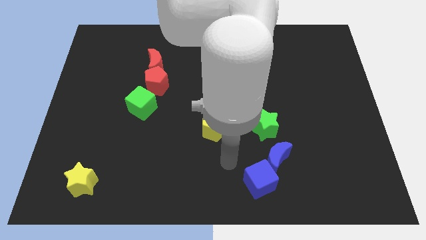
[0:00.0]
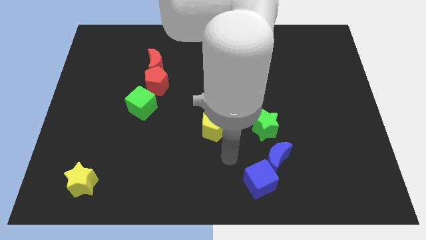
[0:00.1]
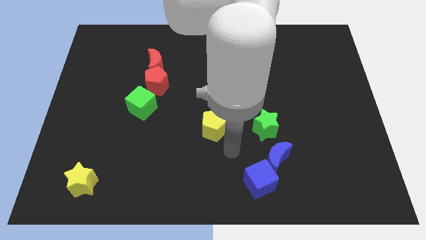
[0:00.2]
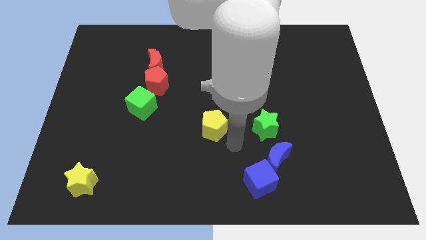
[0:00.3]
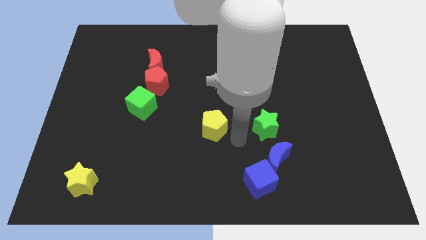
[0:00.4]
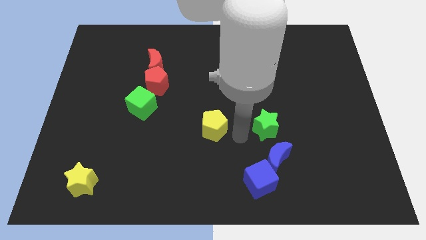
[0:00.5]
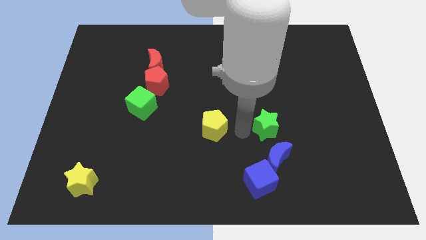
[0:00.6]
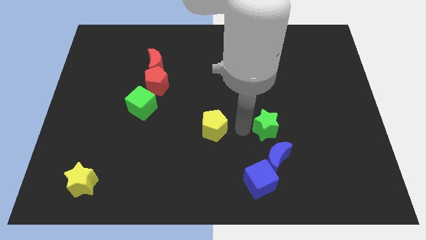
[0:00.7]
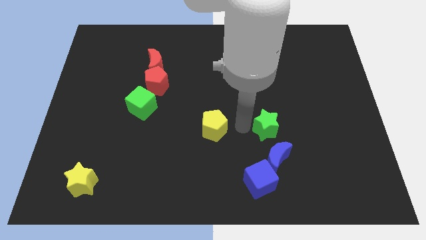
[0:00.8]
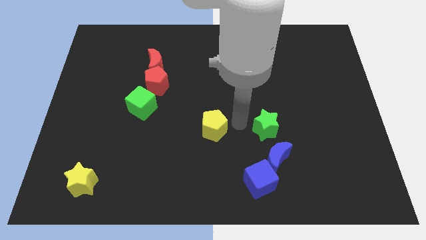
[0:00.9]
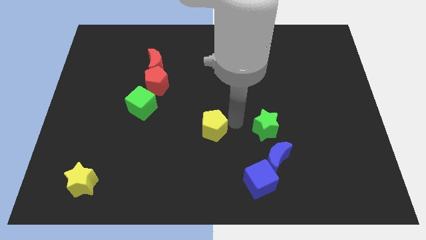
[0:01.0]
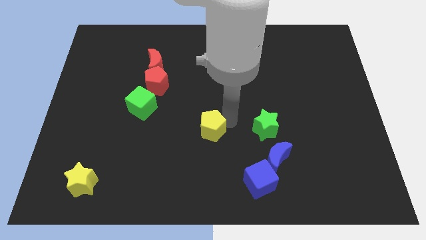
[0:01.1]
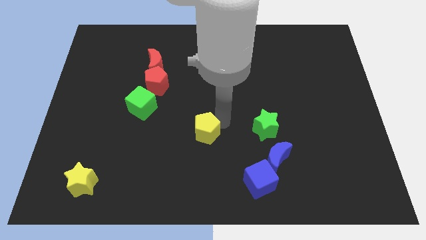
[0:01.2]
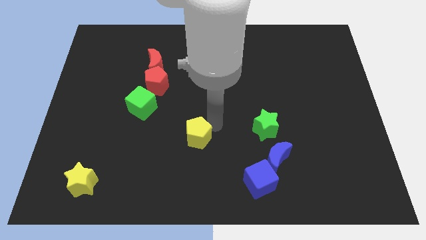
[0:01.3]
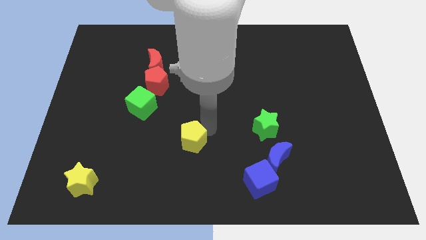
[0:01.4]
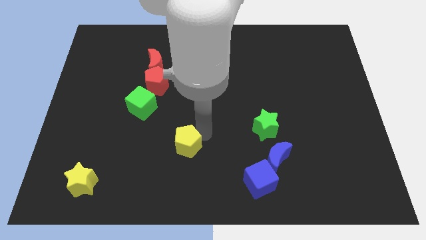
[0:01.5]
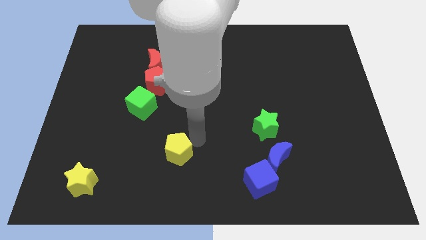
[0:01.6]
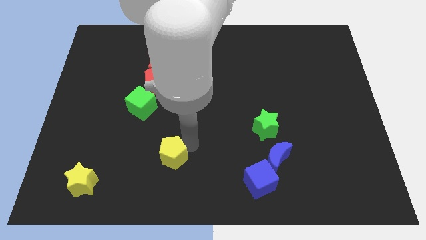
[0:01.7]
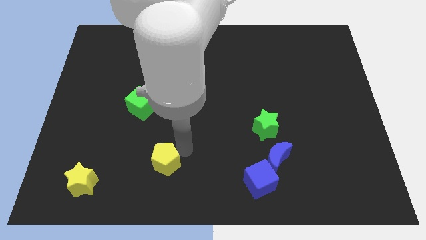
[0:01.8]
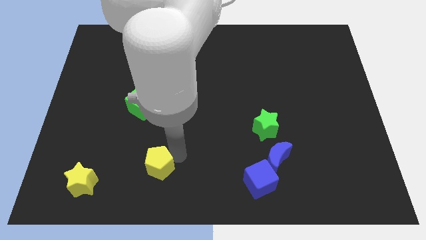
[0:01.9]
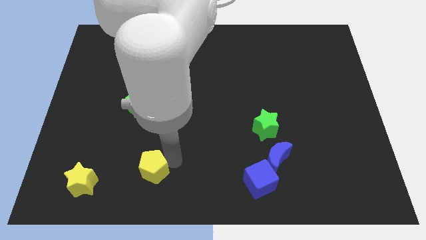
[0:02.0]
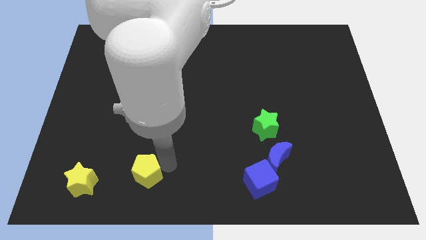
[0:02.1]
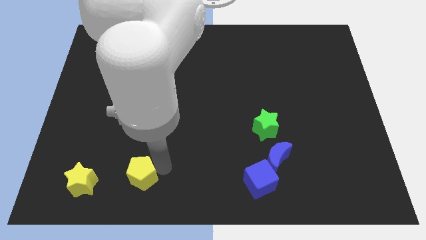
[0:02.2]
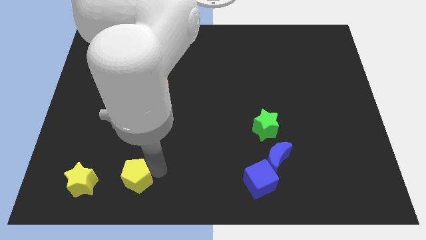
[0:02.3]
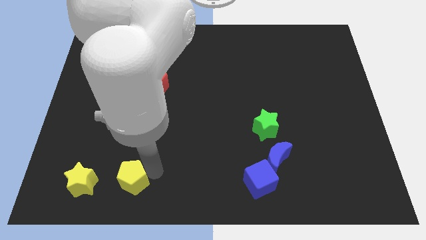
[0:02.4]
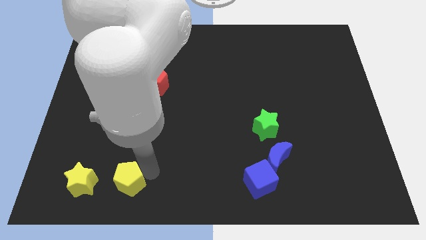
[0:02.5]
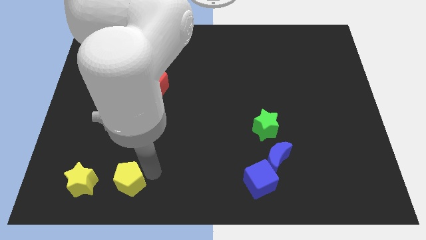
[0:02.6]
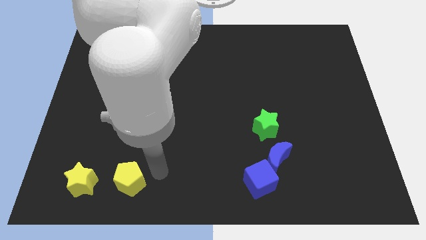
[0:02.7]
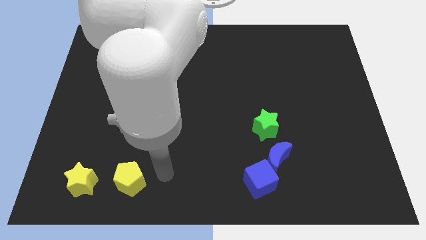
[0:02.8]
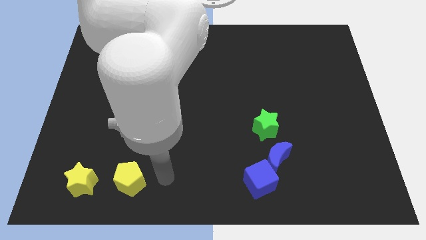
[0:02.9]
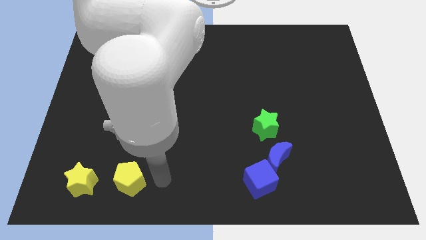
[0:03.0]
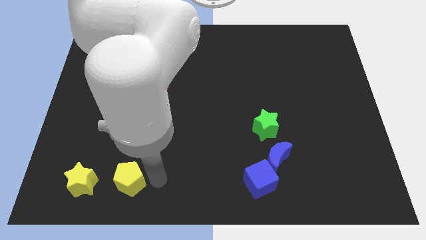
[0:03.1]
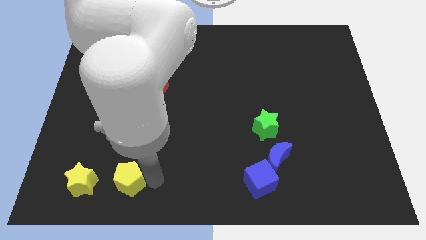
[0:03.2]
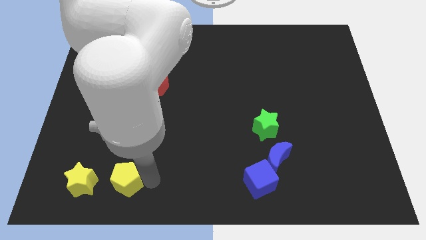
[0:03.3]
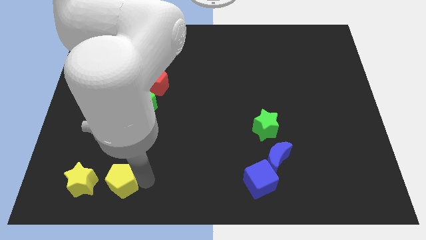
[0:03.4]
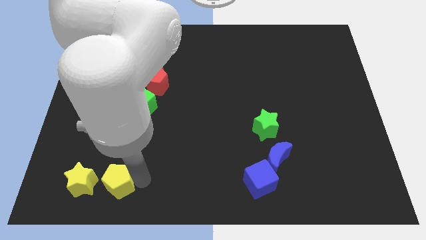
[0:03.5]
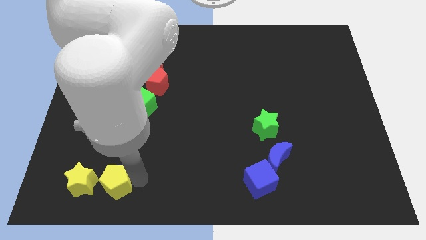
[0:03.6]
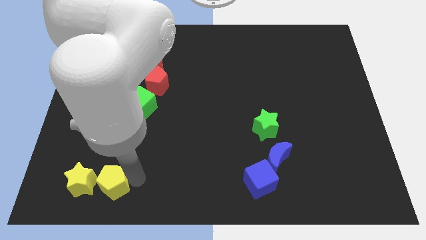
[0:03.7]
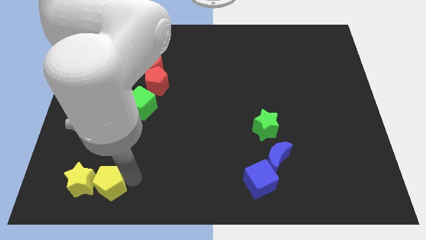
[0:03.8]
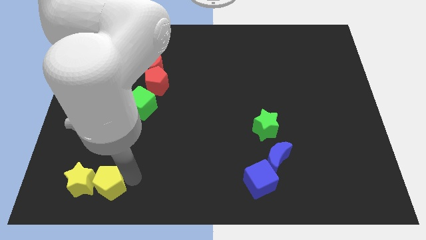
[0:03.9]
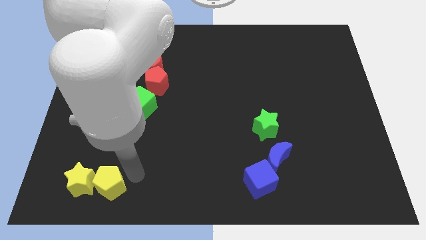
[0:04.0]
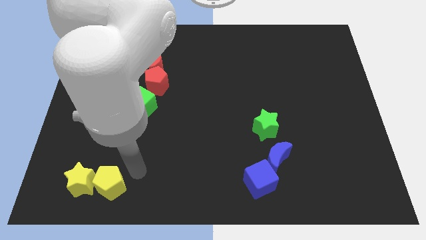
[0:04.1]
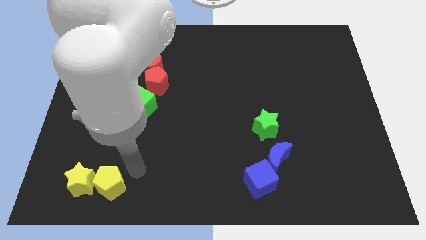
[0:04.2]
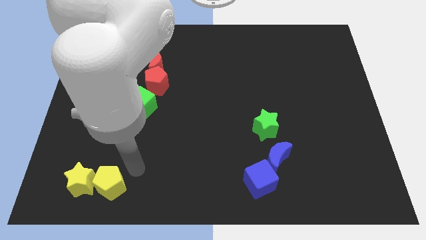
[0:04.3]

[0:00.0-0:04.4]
place the yellow pentagon close to the yellow star

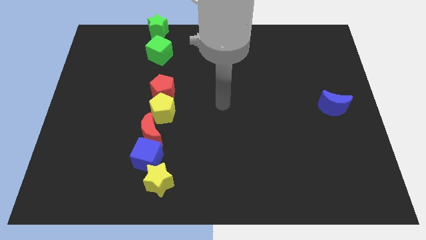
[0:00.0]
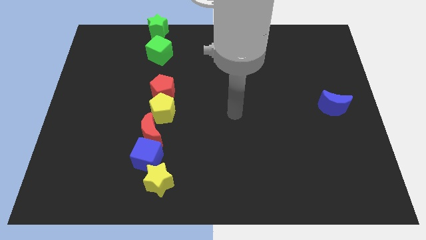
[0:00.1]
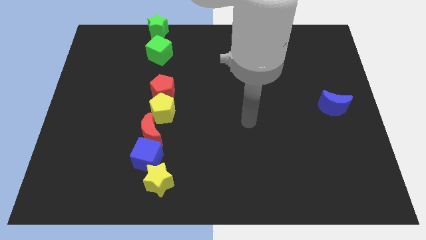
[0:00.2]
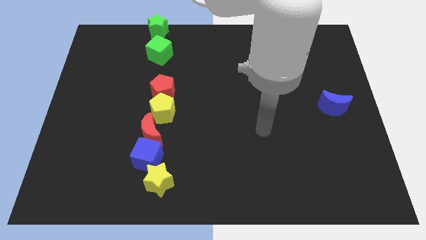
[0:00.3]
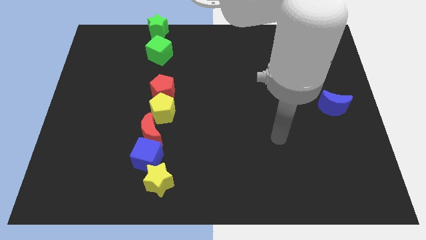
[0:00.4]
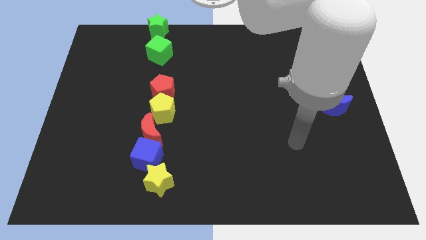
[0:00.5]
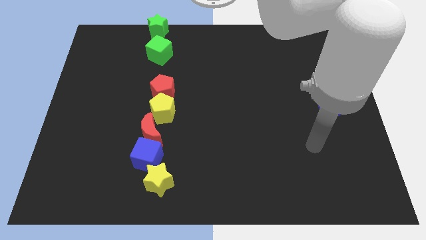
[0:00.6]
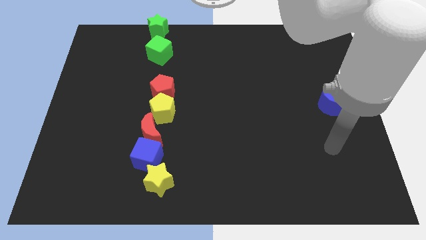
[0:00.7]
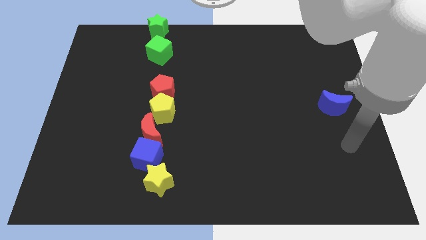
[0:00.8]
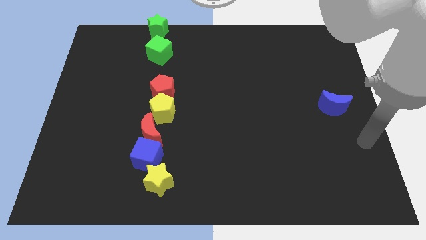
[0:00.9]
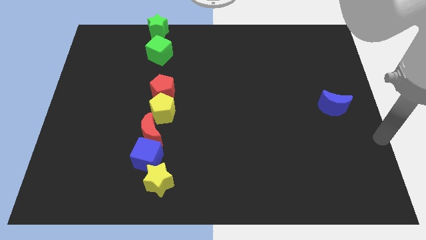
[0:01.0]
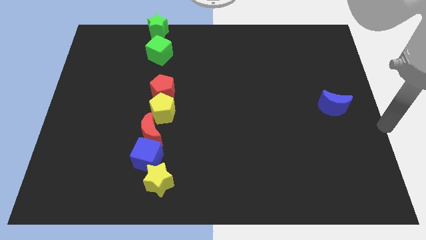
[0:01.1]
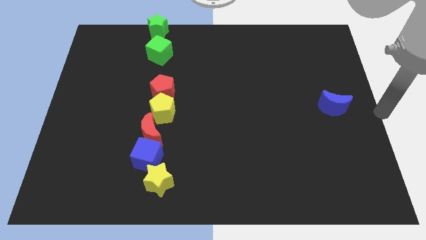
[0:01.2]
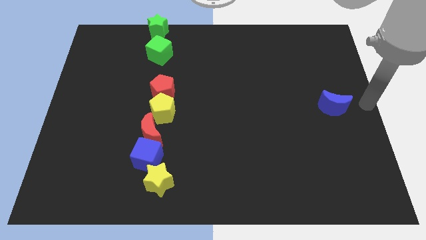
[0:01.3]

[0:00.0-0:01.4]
push your arm at the center right

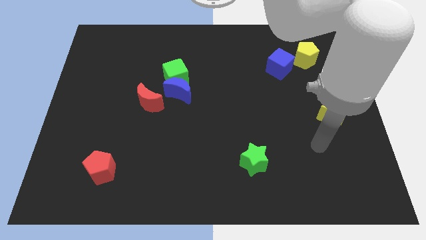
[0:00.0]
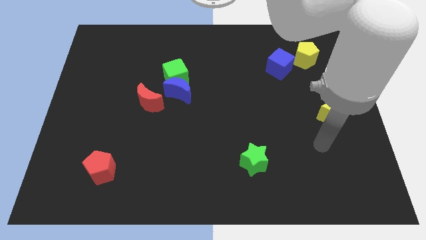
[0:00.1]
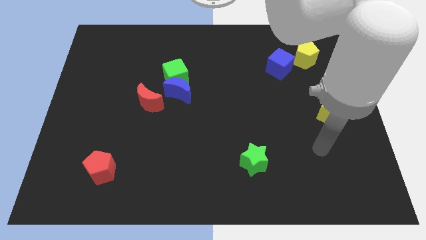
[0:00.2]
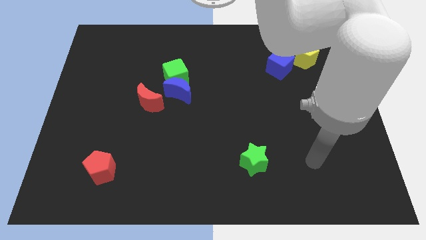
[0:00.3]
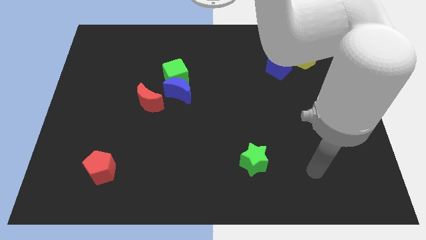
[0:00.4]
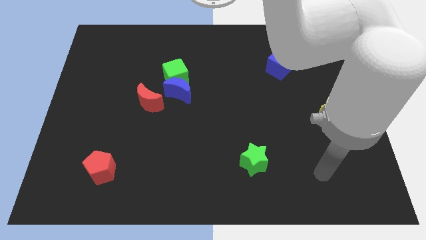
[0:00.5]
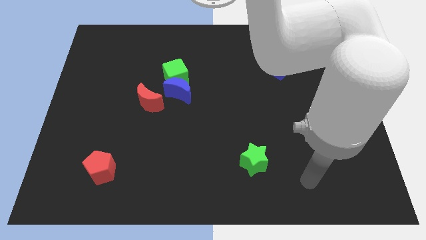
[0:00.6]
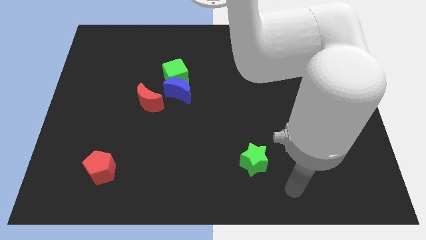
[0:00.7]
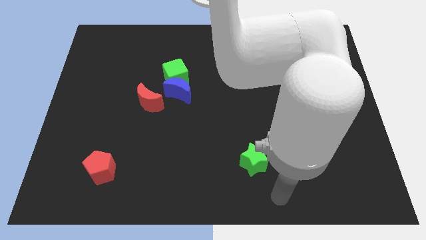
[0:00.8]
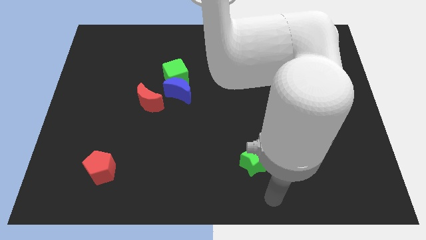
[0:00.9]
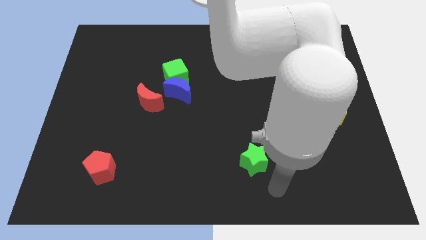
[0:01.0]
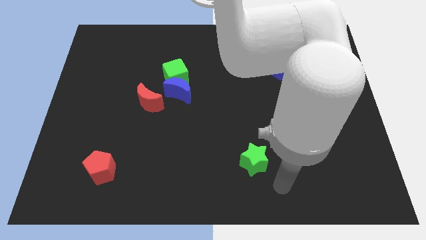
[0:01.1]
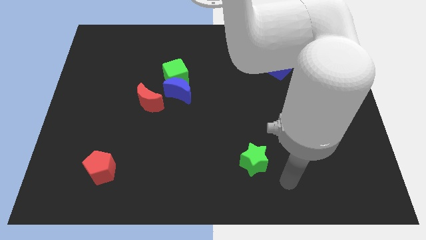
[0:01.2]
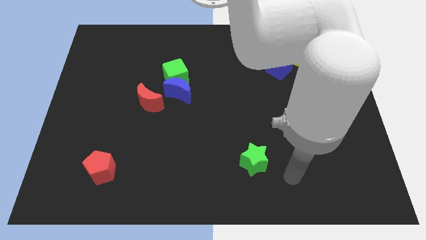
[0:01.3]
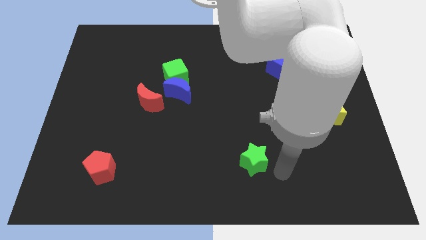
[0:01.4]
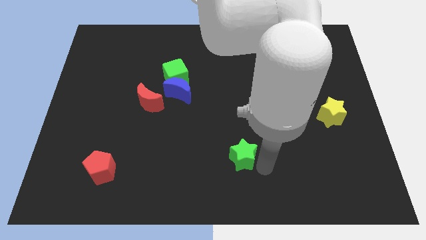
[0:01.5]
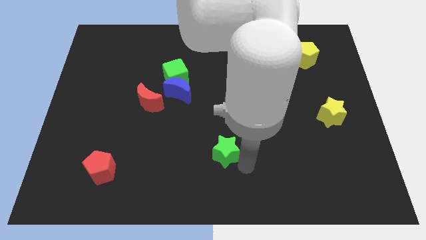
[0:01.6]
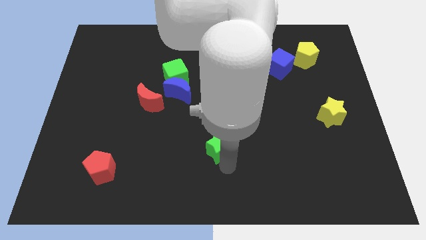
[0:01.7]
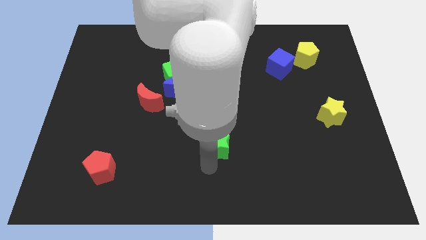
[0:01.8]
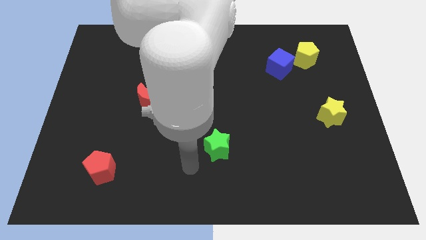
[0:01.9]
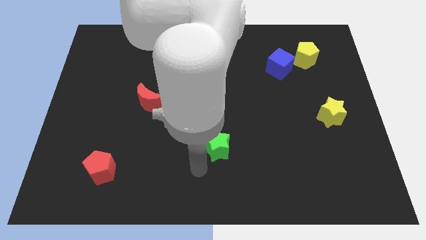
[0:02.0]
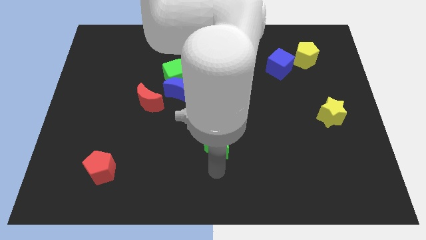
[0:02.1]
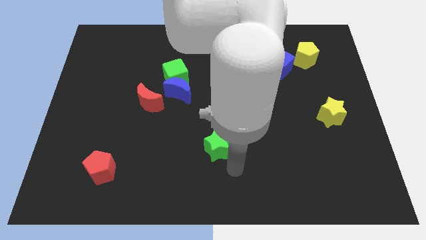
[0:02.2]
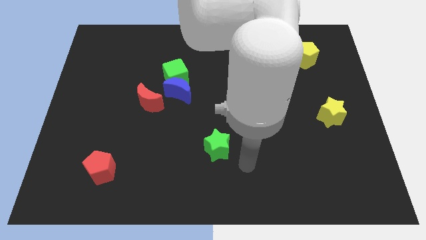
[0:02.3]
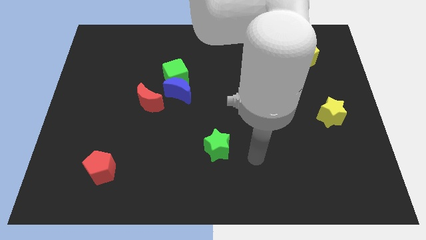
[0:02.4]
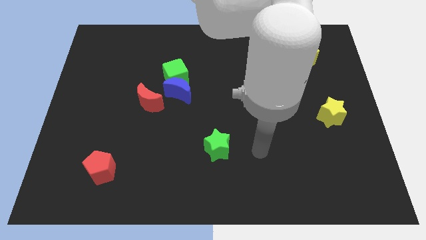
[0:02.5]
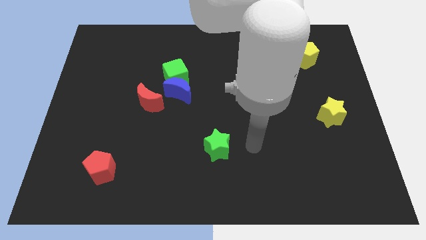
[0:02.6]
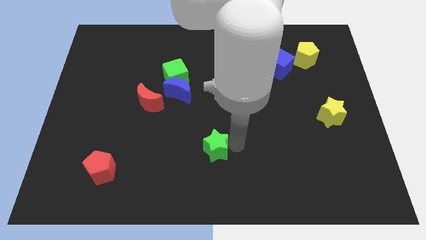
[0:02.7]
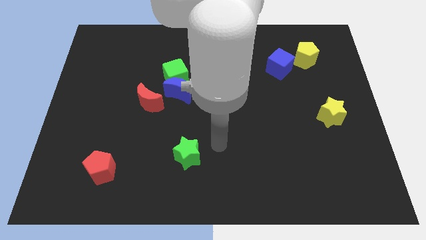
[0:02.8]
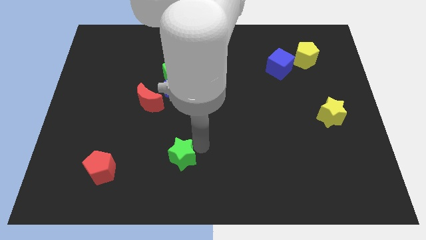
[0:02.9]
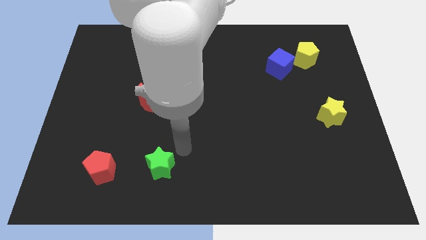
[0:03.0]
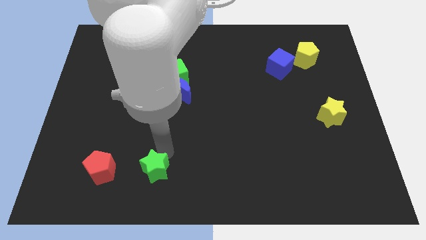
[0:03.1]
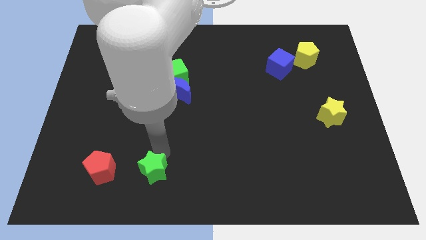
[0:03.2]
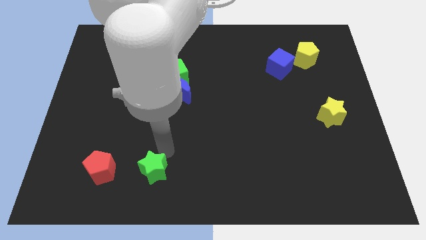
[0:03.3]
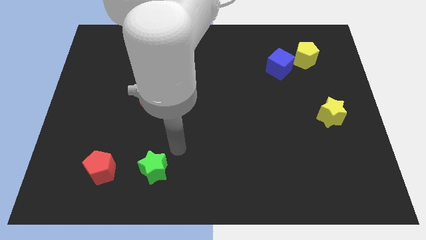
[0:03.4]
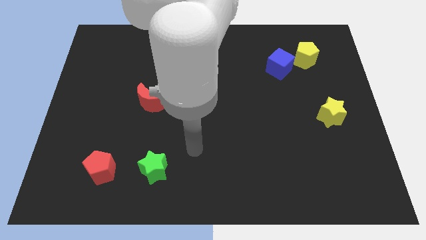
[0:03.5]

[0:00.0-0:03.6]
place green star right to red pentagon
